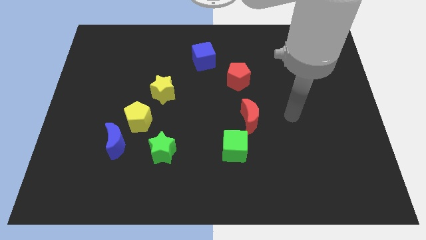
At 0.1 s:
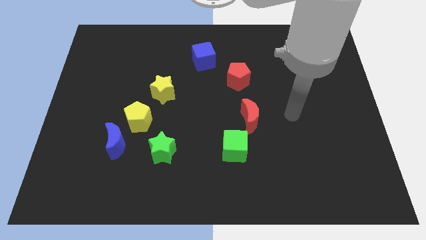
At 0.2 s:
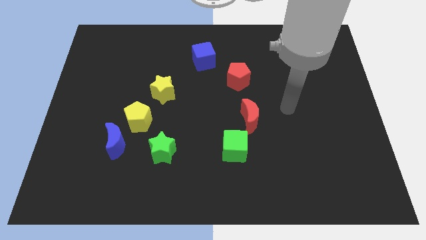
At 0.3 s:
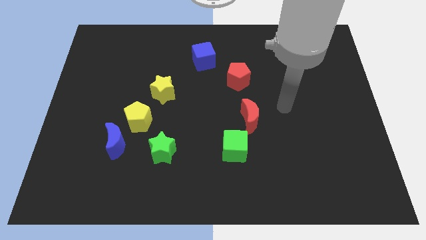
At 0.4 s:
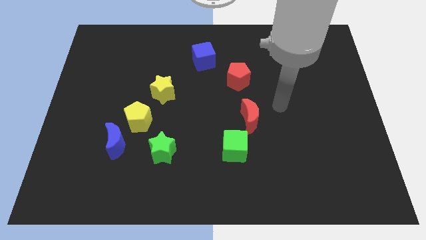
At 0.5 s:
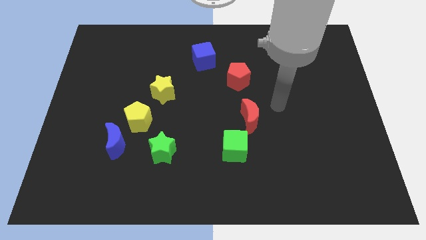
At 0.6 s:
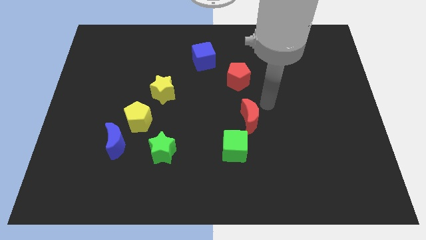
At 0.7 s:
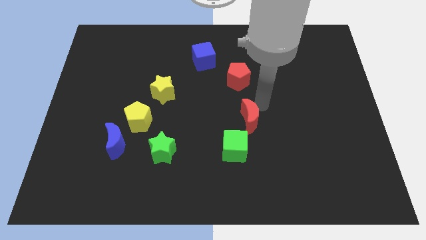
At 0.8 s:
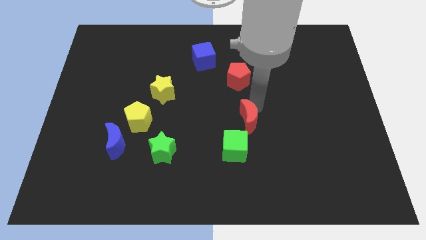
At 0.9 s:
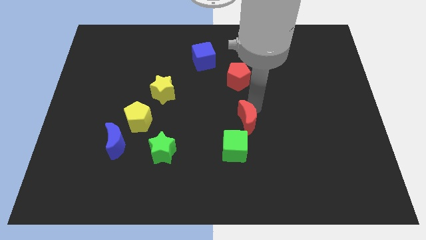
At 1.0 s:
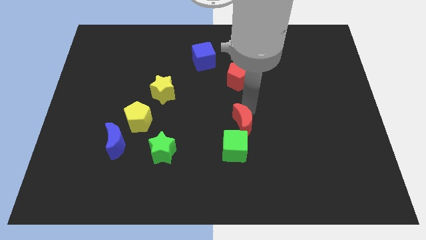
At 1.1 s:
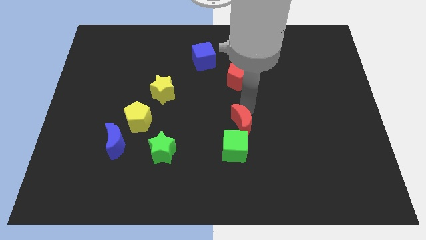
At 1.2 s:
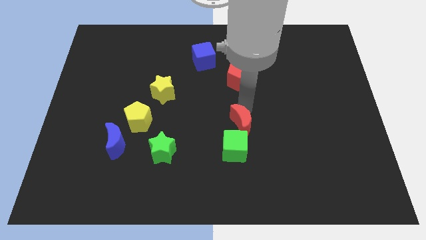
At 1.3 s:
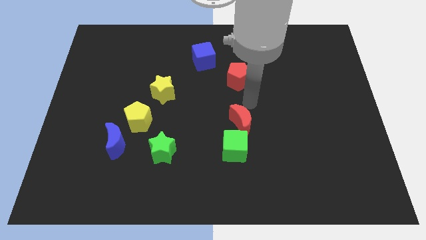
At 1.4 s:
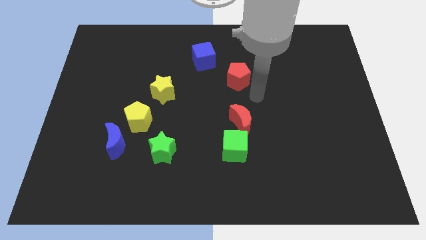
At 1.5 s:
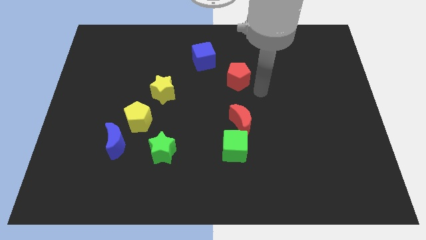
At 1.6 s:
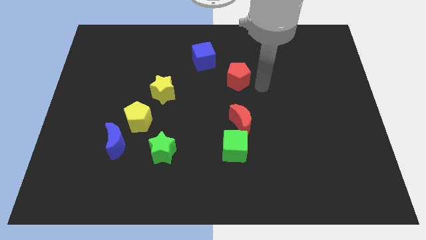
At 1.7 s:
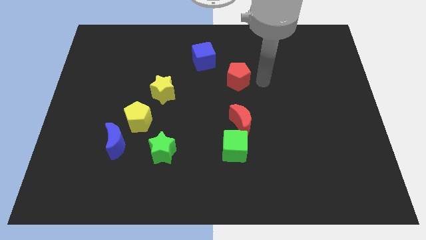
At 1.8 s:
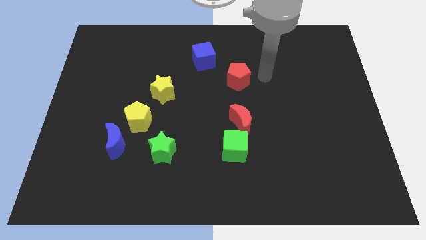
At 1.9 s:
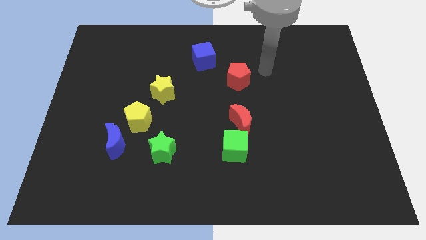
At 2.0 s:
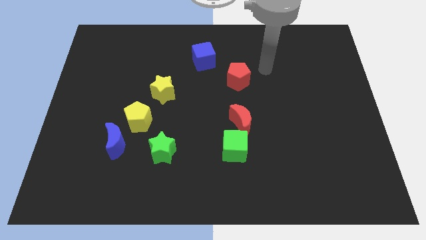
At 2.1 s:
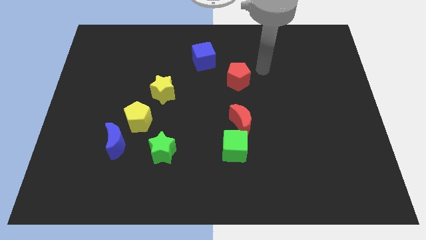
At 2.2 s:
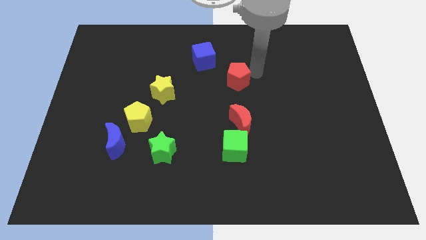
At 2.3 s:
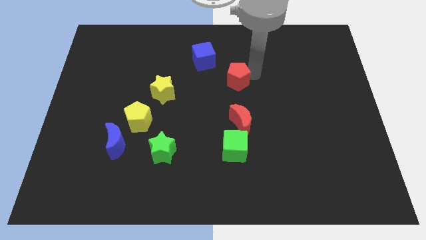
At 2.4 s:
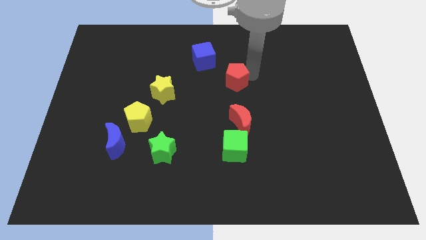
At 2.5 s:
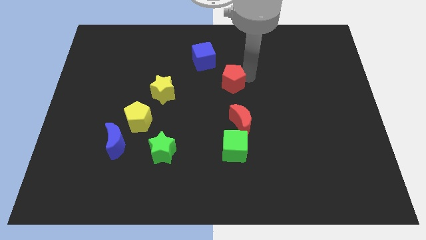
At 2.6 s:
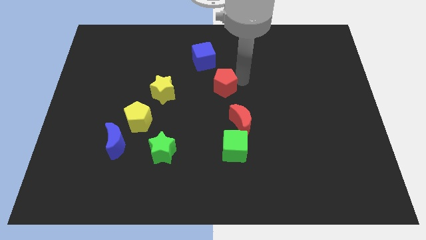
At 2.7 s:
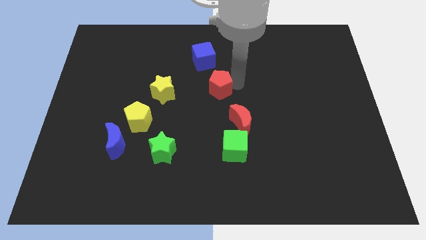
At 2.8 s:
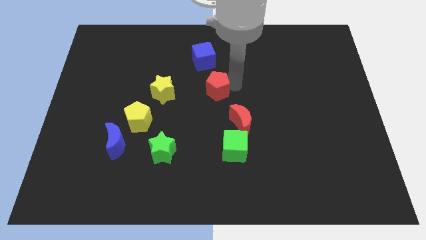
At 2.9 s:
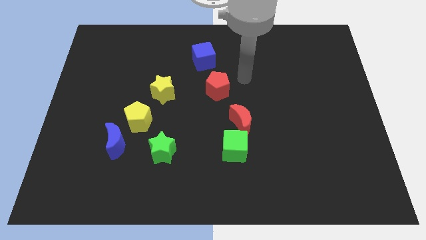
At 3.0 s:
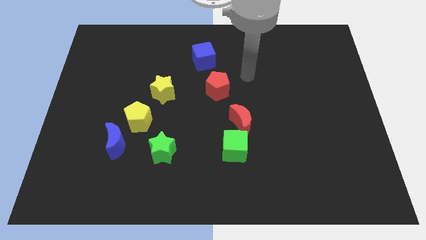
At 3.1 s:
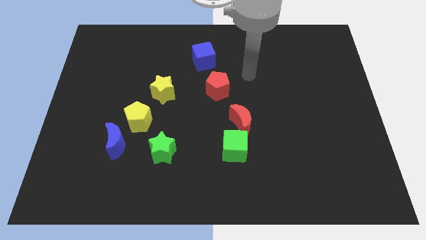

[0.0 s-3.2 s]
push the red crescent and red pentagon slightly to left

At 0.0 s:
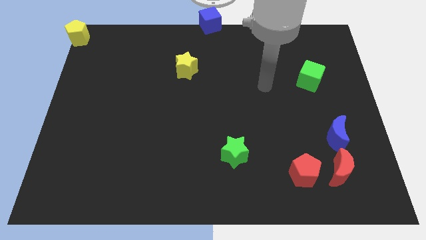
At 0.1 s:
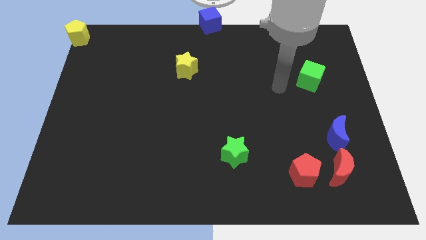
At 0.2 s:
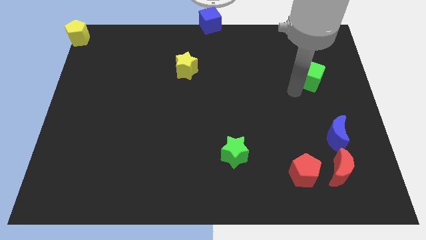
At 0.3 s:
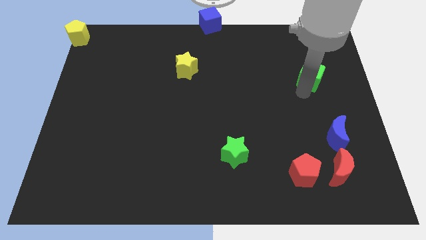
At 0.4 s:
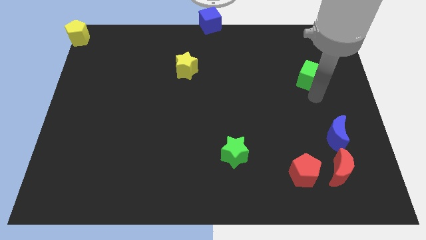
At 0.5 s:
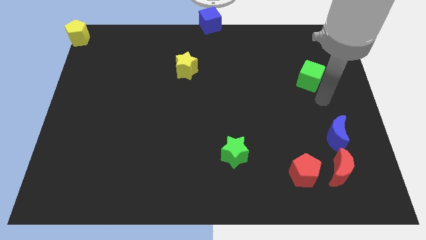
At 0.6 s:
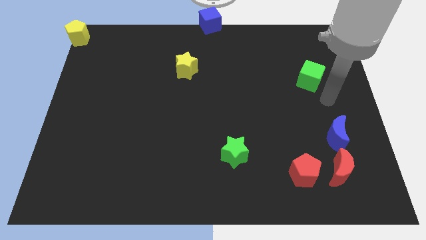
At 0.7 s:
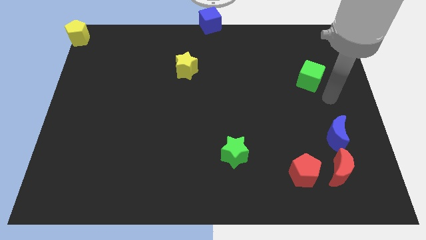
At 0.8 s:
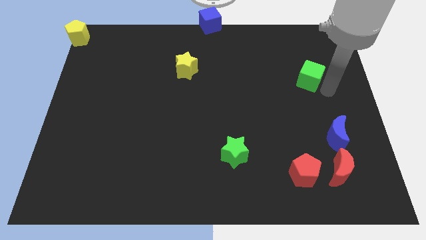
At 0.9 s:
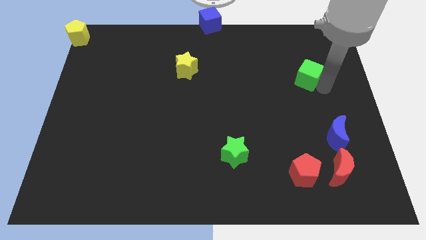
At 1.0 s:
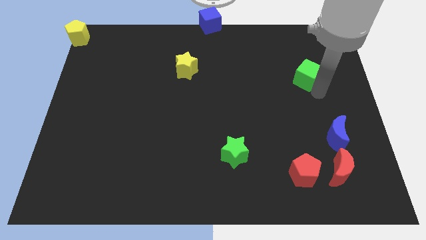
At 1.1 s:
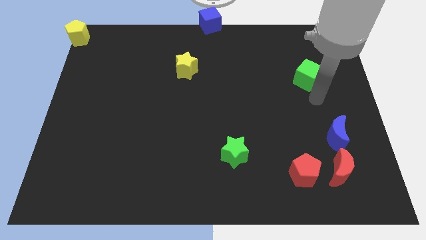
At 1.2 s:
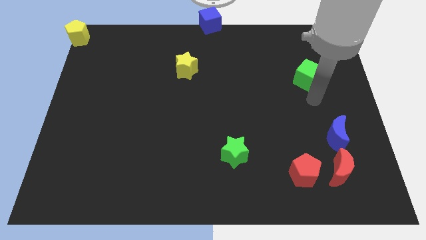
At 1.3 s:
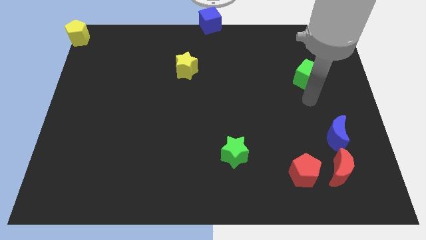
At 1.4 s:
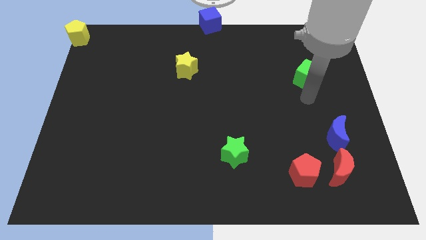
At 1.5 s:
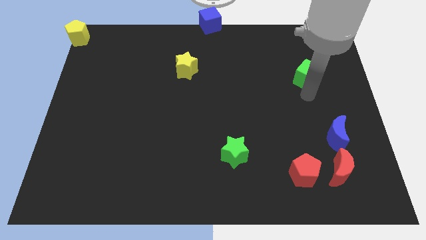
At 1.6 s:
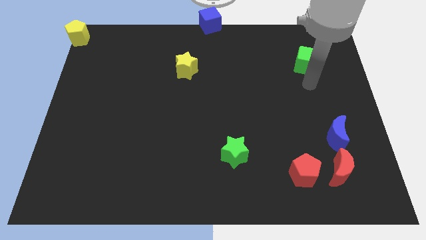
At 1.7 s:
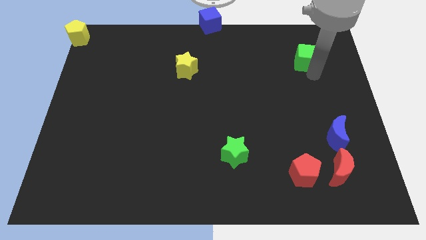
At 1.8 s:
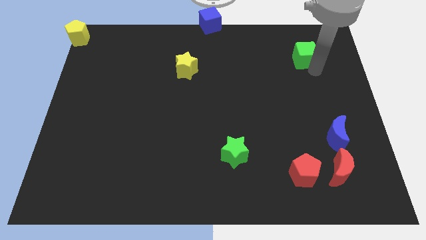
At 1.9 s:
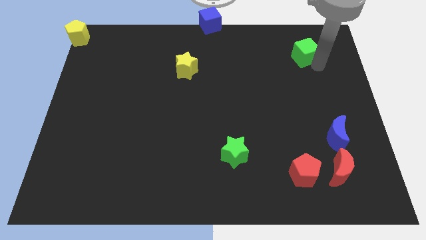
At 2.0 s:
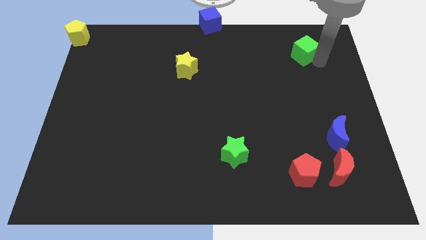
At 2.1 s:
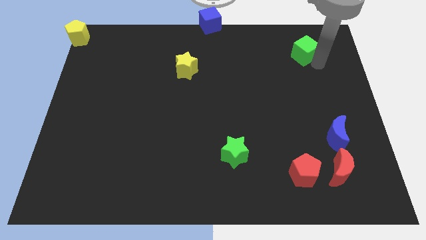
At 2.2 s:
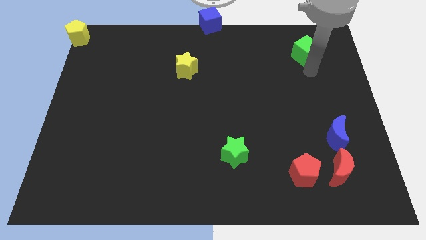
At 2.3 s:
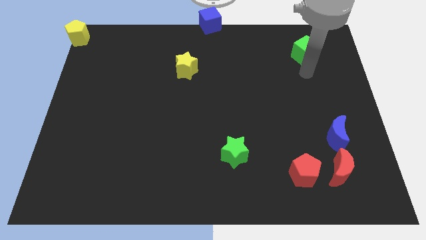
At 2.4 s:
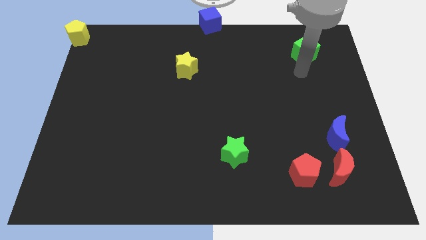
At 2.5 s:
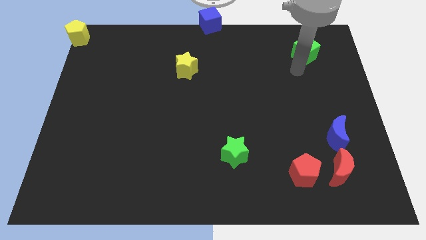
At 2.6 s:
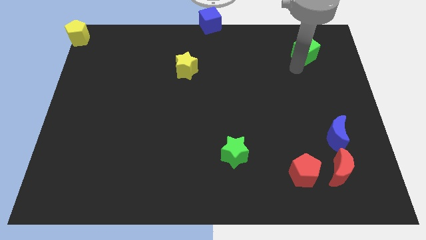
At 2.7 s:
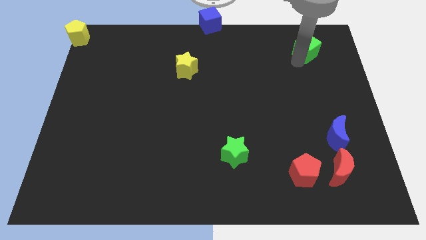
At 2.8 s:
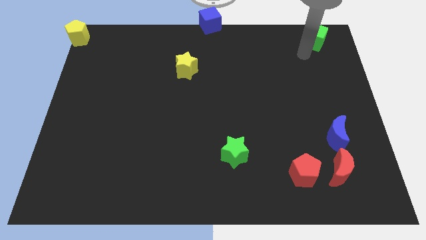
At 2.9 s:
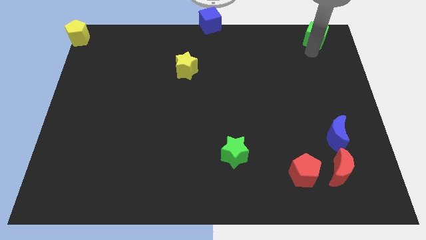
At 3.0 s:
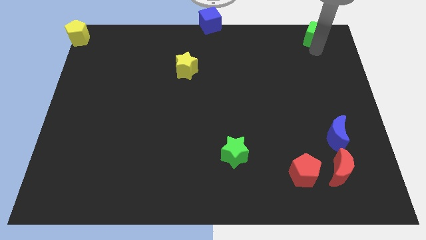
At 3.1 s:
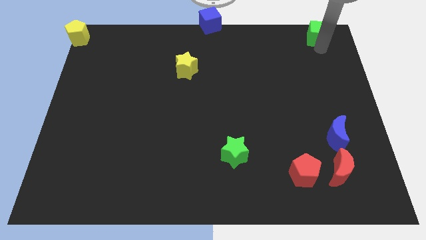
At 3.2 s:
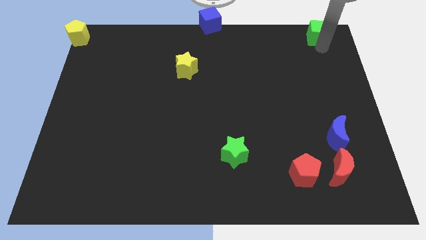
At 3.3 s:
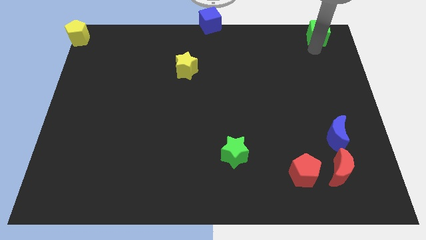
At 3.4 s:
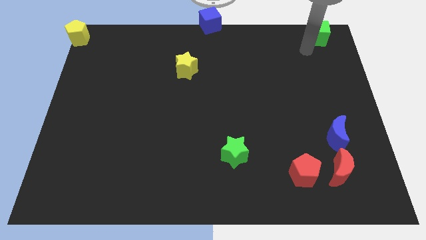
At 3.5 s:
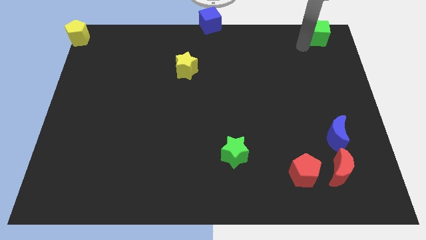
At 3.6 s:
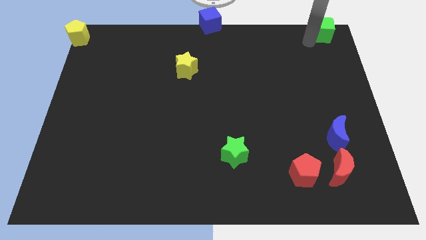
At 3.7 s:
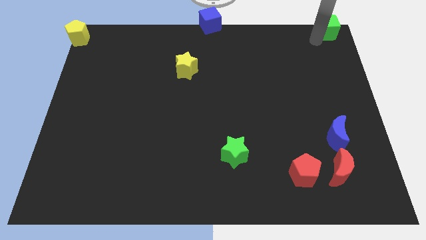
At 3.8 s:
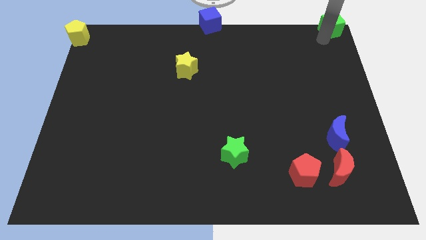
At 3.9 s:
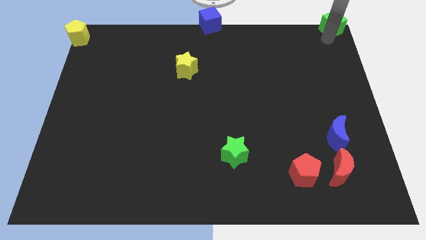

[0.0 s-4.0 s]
place green cube towards top right corner

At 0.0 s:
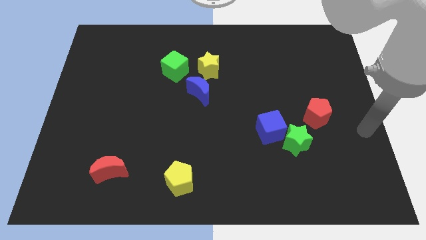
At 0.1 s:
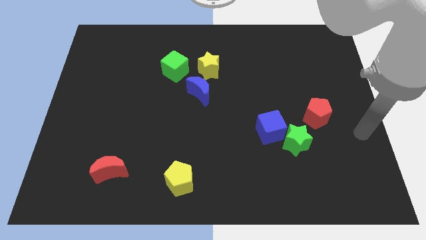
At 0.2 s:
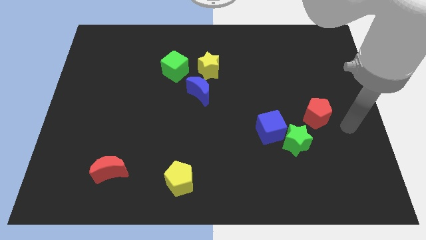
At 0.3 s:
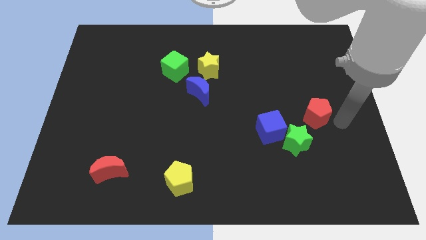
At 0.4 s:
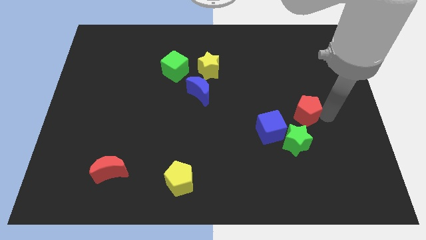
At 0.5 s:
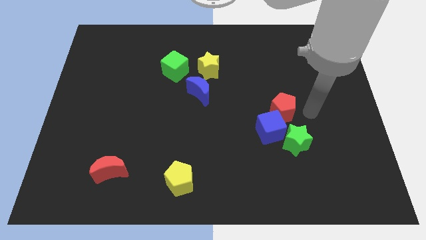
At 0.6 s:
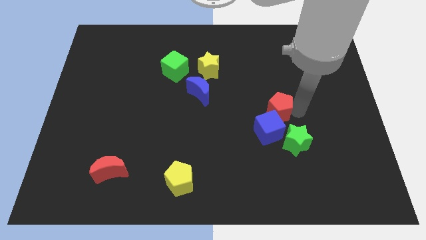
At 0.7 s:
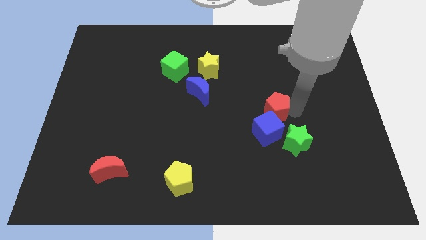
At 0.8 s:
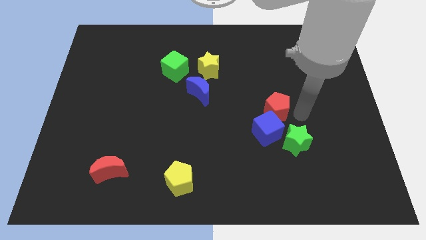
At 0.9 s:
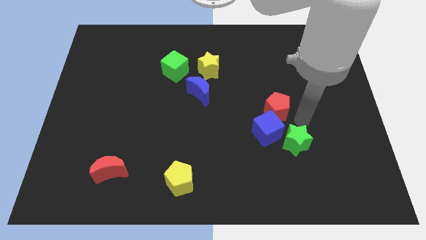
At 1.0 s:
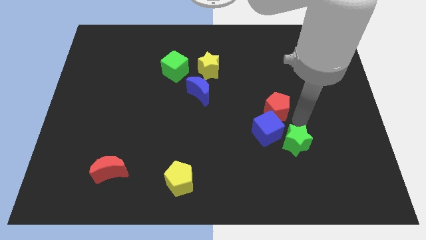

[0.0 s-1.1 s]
move the red pentagon to the top side of the blue cube

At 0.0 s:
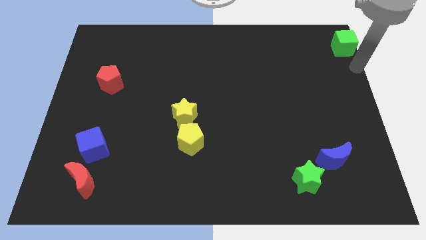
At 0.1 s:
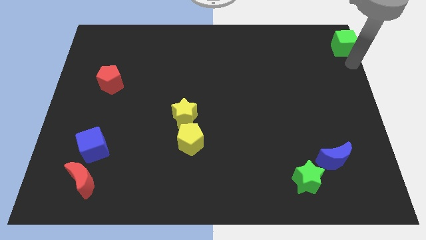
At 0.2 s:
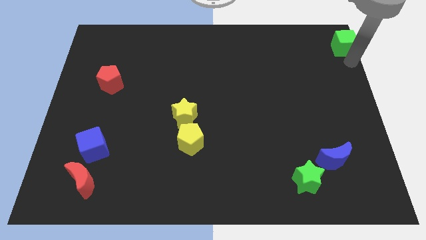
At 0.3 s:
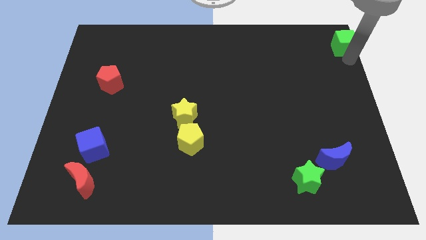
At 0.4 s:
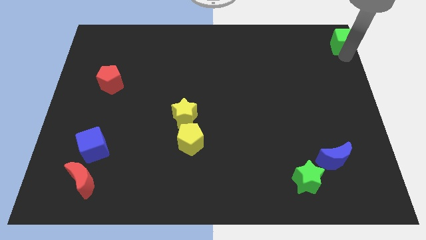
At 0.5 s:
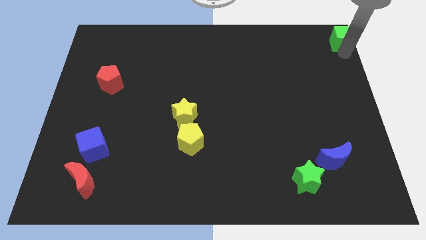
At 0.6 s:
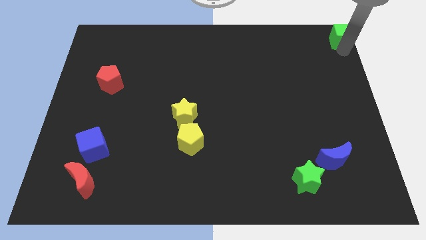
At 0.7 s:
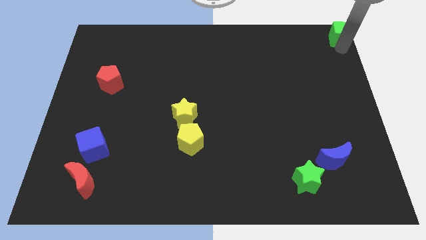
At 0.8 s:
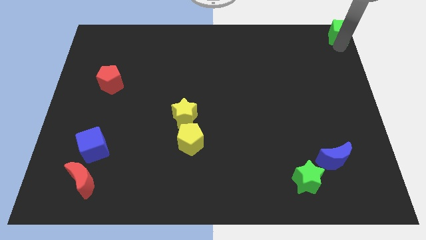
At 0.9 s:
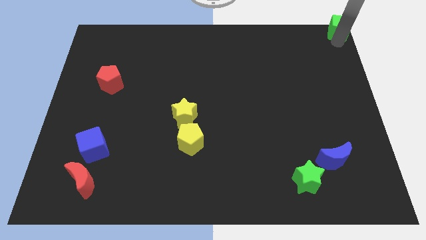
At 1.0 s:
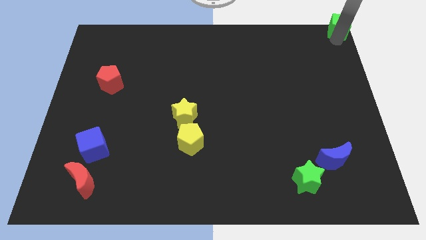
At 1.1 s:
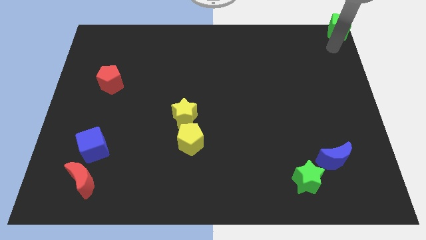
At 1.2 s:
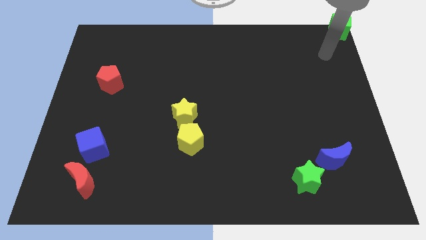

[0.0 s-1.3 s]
place the green cube to the top right corner of the board
